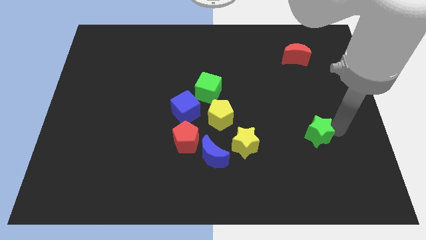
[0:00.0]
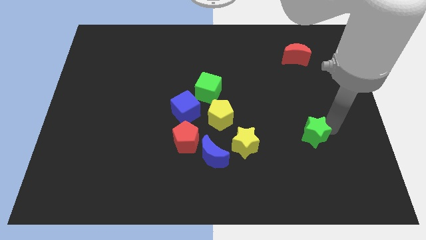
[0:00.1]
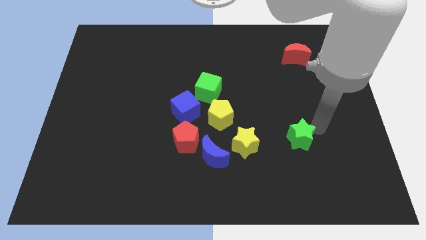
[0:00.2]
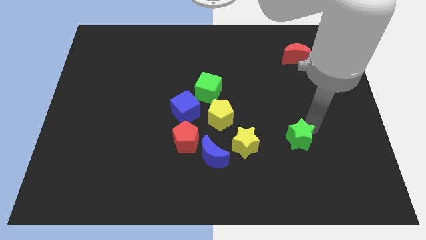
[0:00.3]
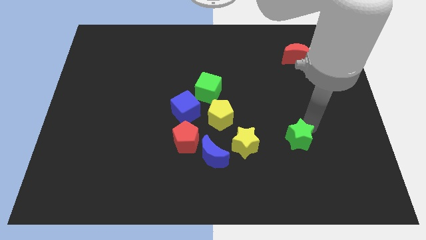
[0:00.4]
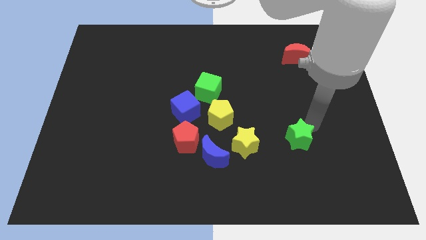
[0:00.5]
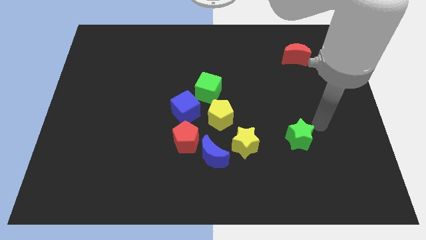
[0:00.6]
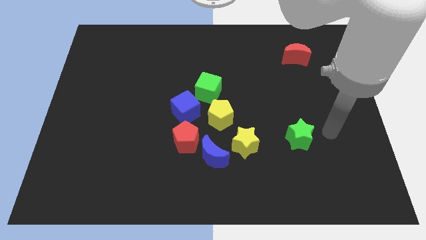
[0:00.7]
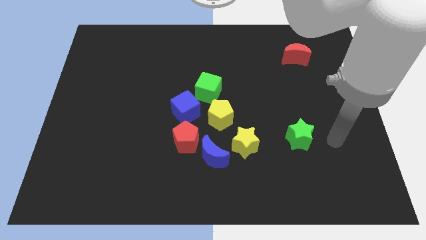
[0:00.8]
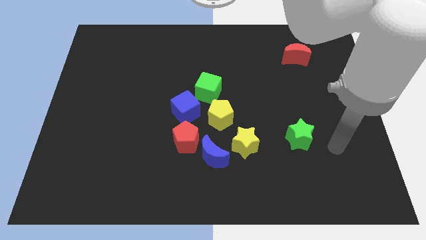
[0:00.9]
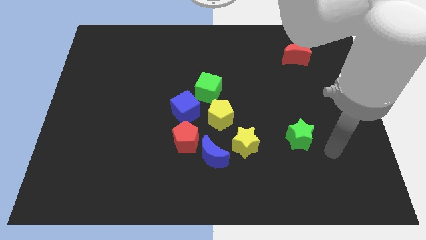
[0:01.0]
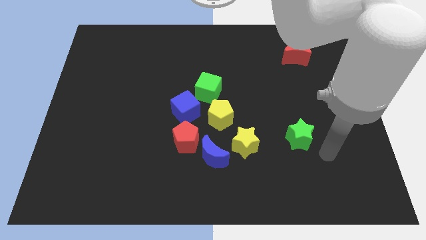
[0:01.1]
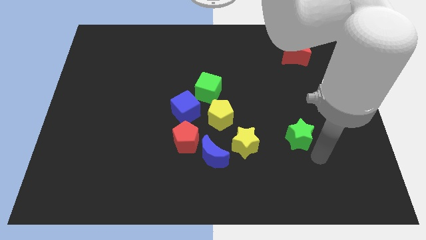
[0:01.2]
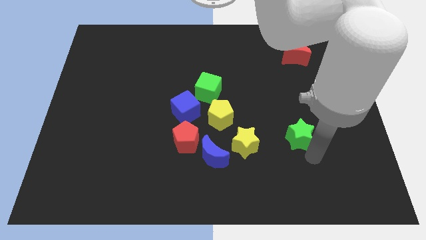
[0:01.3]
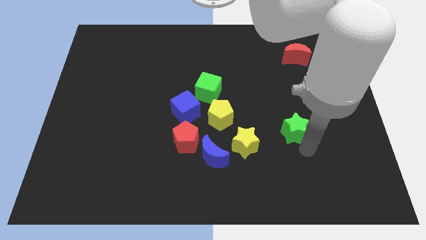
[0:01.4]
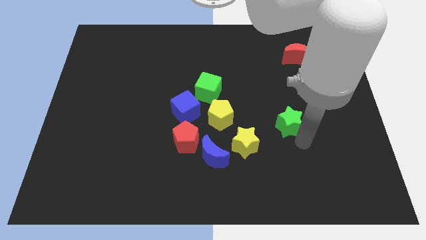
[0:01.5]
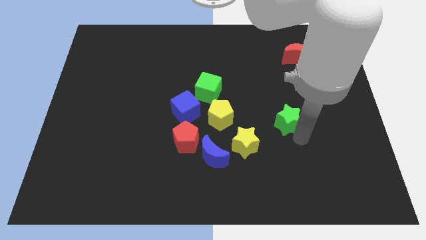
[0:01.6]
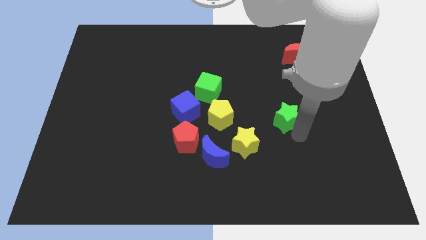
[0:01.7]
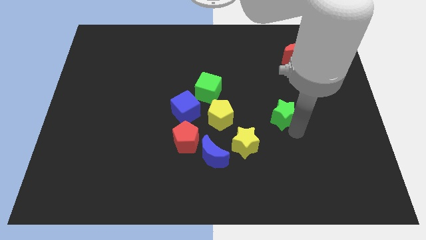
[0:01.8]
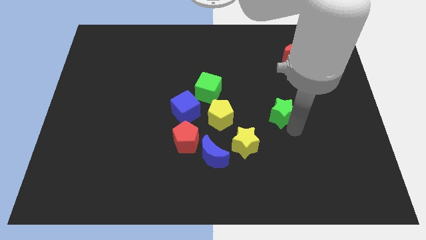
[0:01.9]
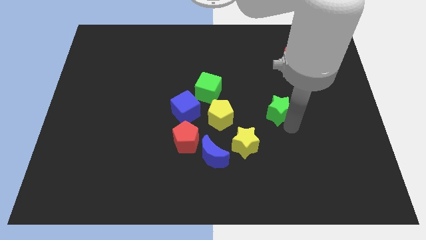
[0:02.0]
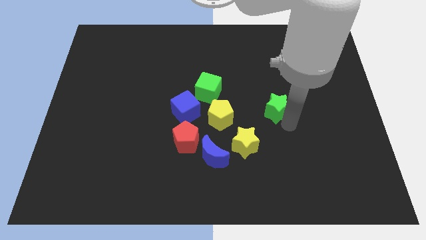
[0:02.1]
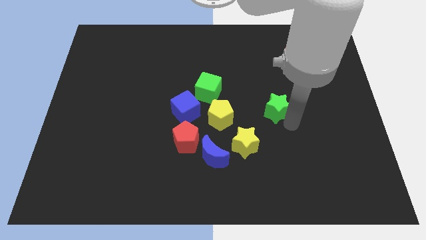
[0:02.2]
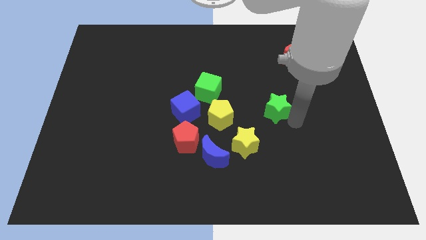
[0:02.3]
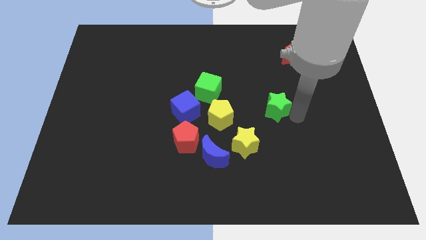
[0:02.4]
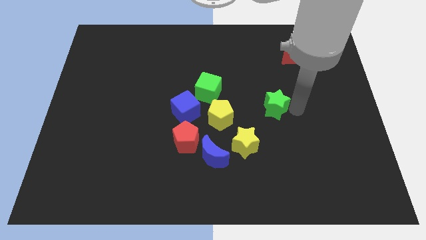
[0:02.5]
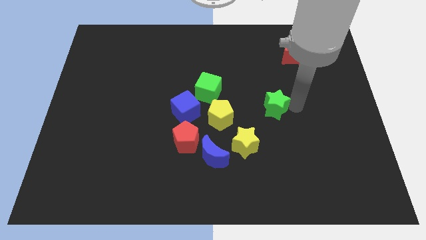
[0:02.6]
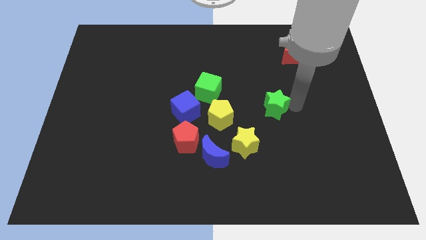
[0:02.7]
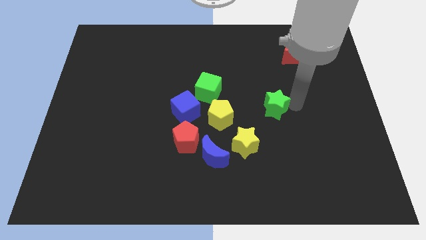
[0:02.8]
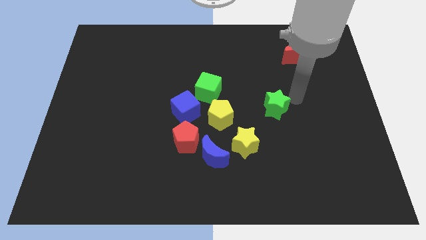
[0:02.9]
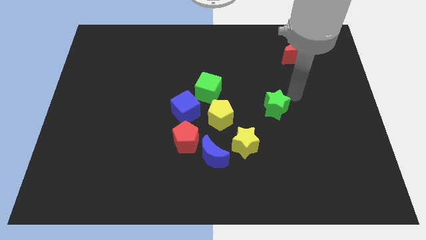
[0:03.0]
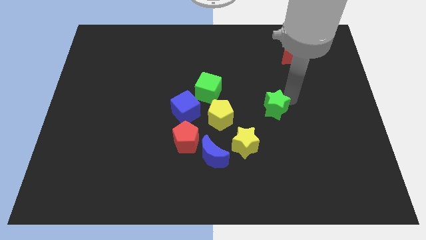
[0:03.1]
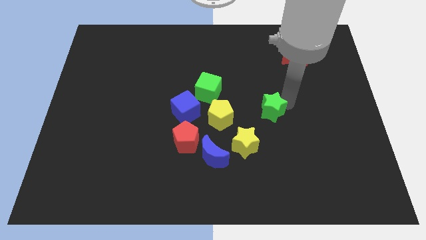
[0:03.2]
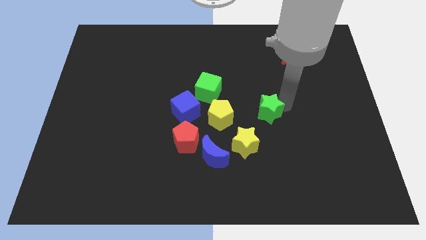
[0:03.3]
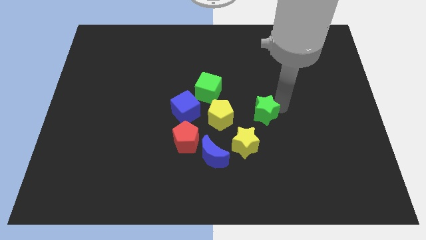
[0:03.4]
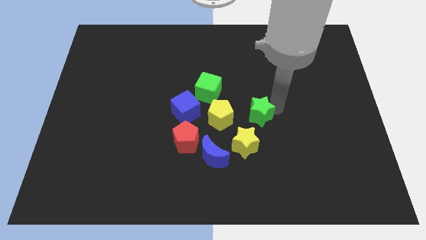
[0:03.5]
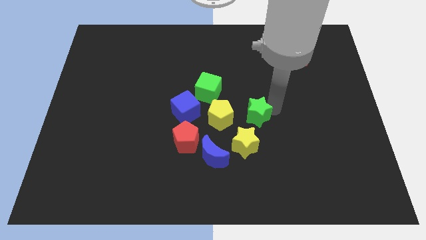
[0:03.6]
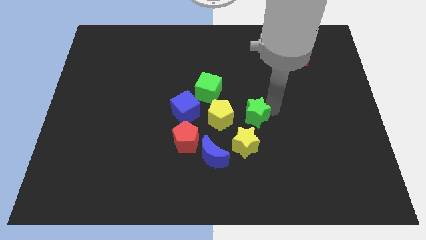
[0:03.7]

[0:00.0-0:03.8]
push the green star diagonally to the bottom left of the red moon

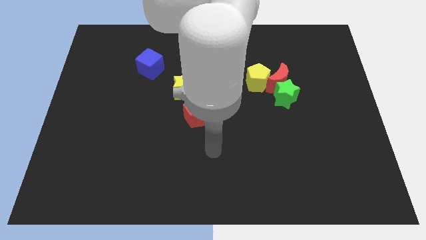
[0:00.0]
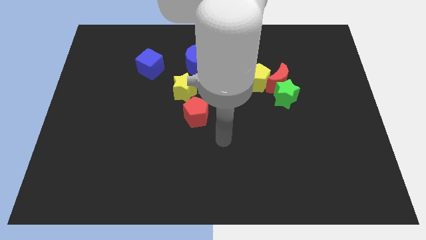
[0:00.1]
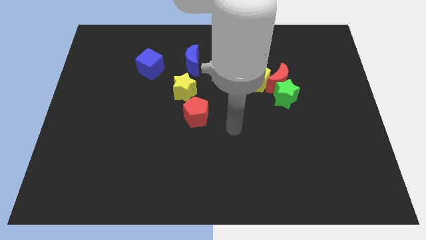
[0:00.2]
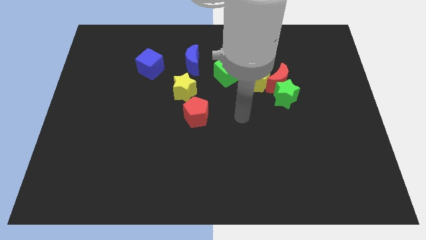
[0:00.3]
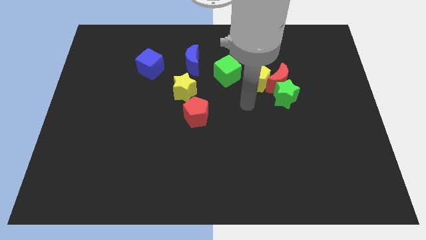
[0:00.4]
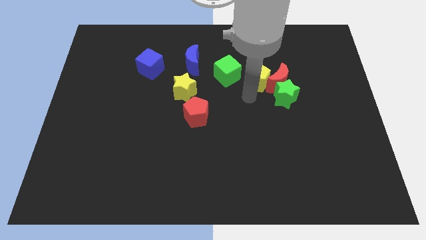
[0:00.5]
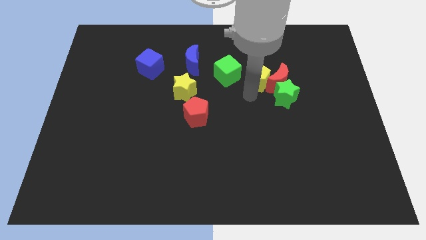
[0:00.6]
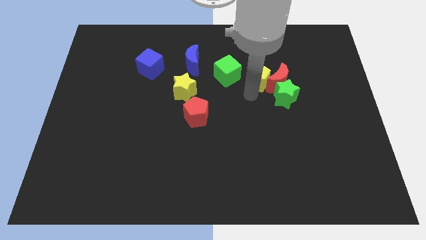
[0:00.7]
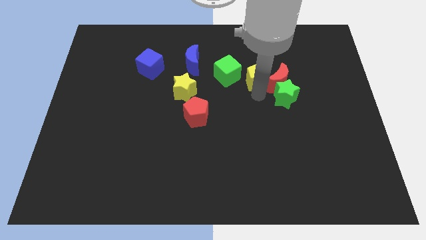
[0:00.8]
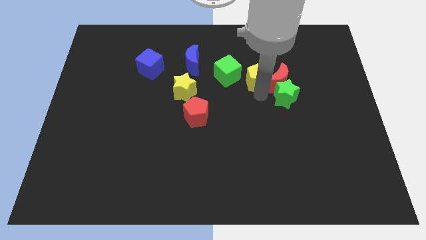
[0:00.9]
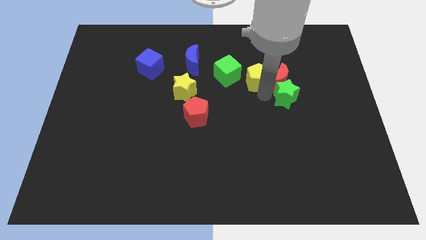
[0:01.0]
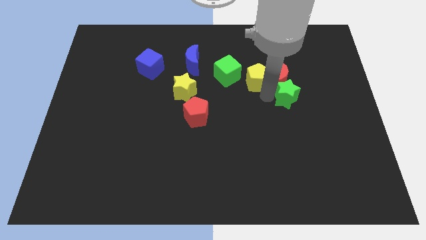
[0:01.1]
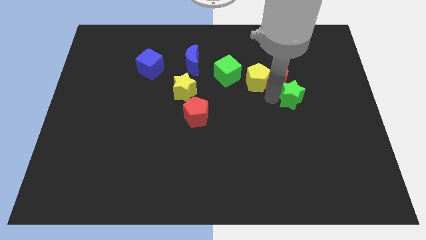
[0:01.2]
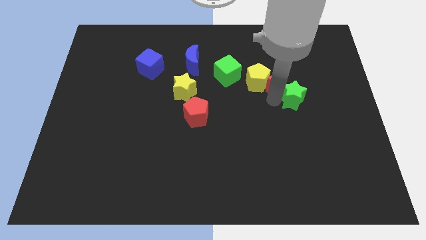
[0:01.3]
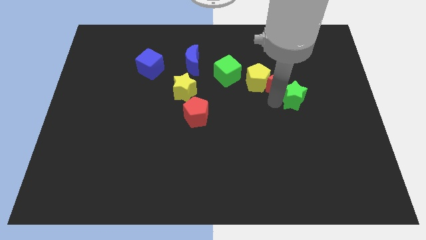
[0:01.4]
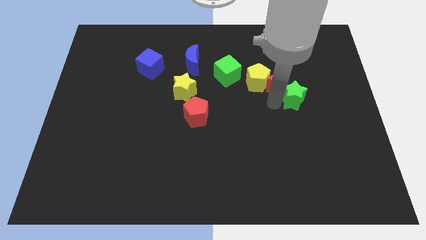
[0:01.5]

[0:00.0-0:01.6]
tap at the left side of the green star

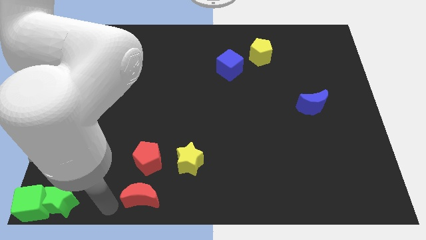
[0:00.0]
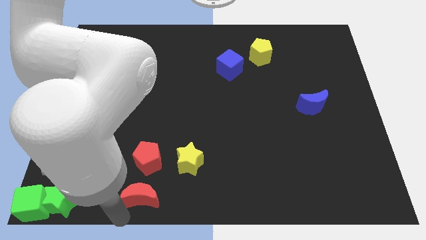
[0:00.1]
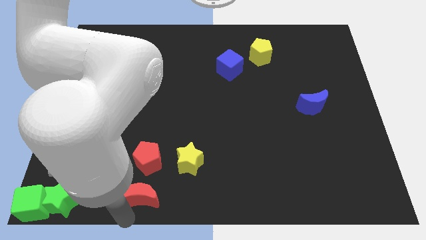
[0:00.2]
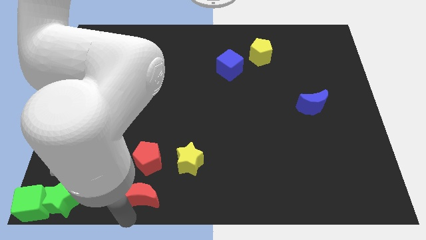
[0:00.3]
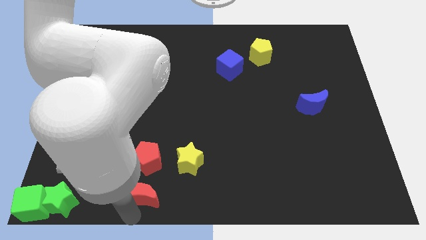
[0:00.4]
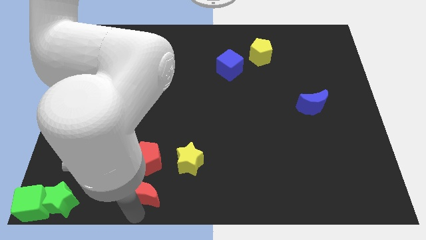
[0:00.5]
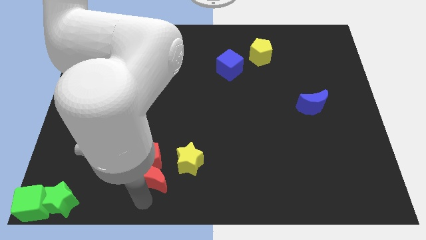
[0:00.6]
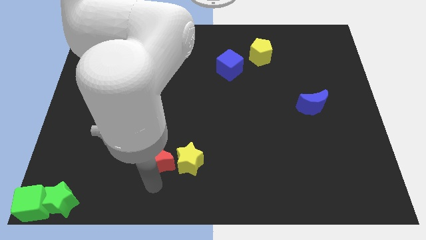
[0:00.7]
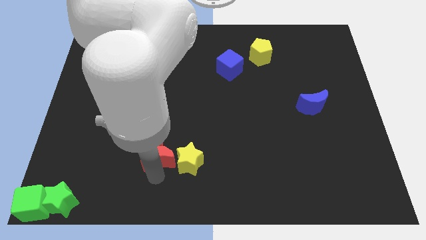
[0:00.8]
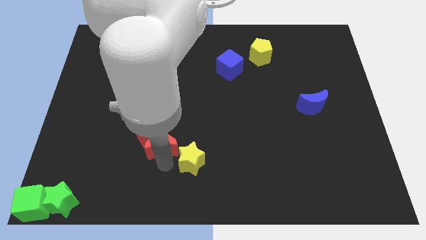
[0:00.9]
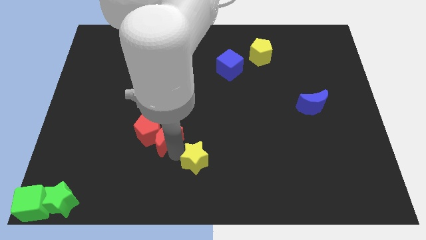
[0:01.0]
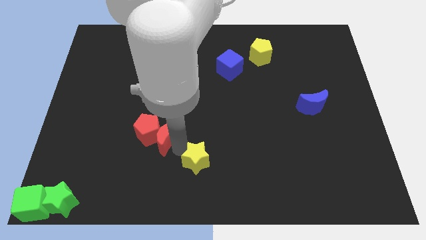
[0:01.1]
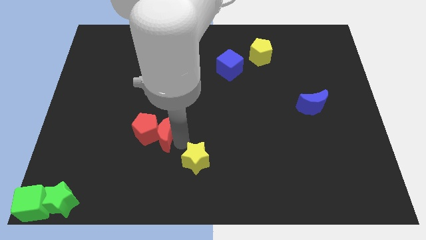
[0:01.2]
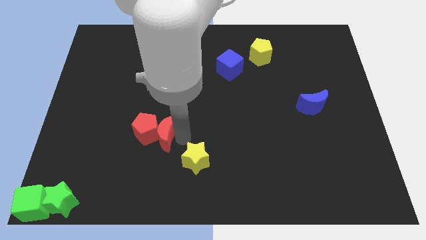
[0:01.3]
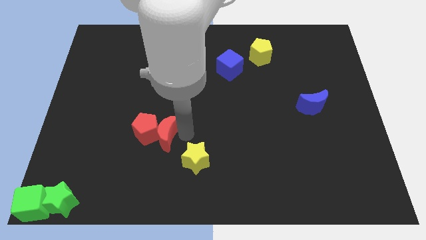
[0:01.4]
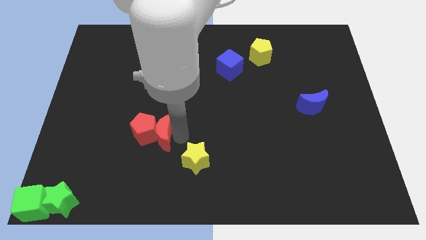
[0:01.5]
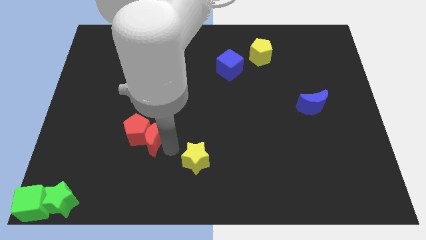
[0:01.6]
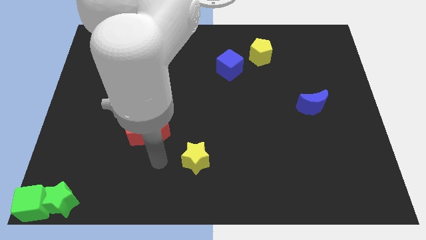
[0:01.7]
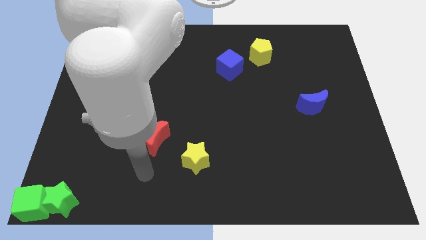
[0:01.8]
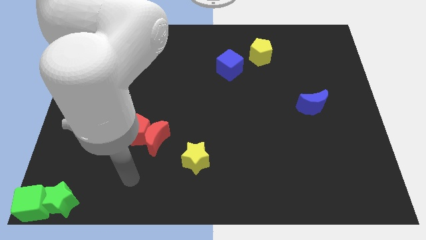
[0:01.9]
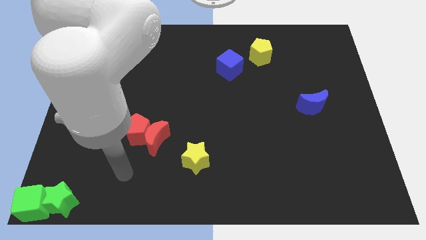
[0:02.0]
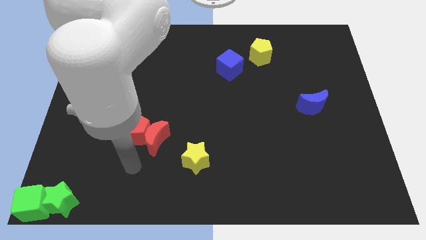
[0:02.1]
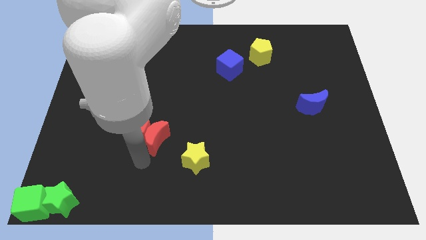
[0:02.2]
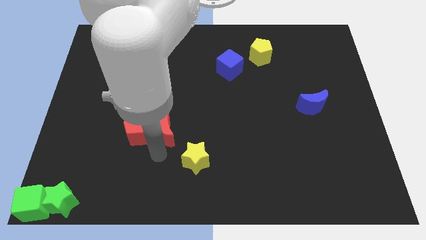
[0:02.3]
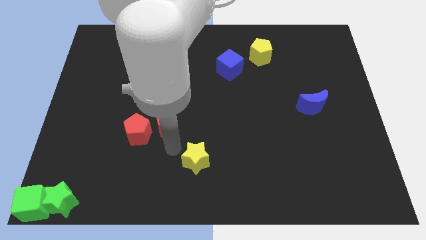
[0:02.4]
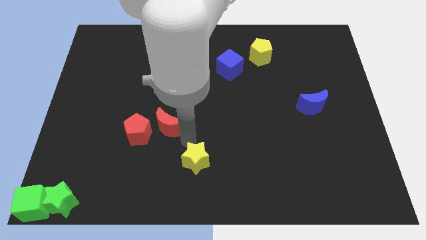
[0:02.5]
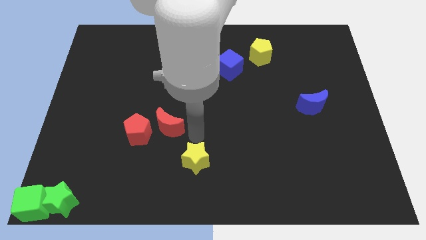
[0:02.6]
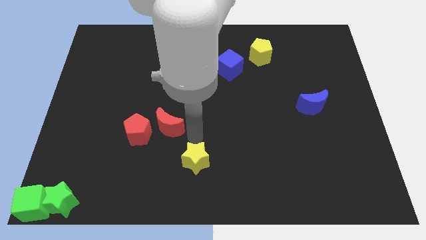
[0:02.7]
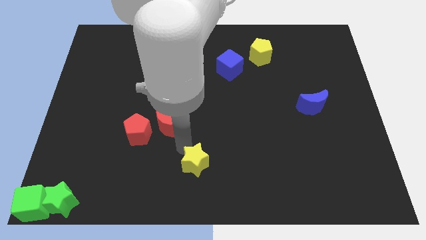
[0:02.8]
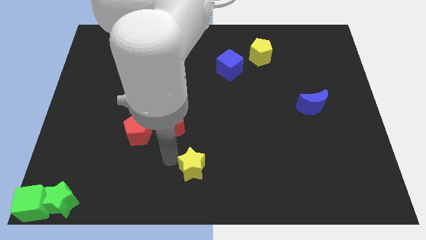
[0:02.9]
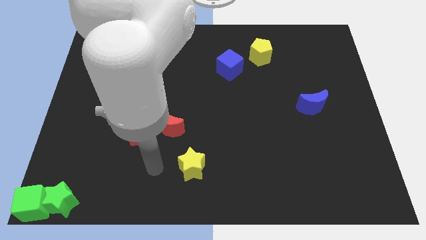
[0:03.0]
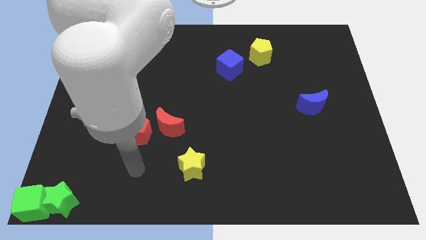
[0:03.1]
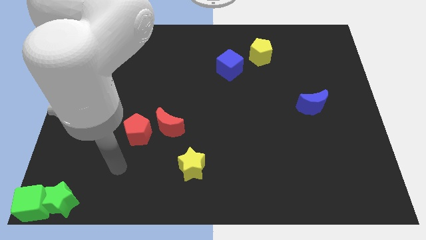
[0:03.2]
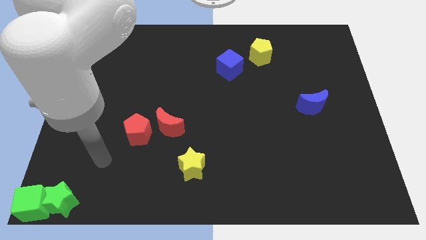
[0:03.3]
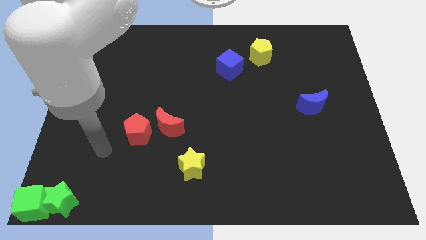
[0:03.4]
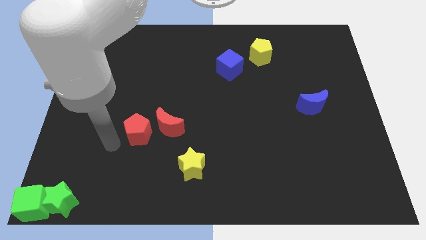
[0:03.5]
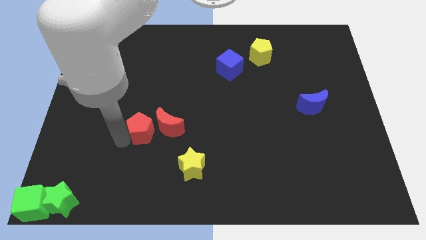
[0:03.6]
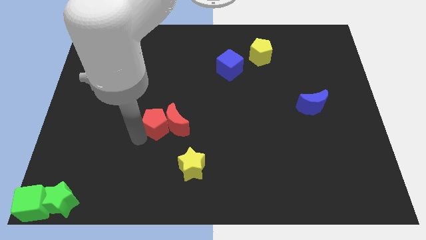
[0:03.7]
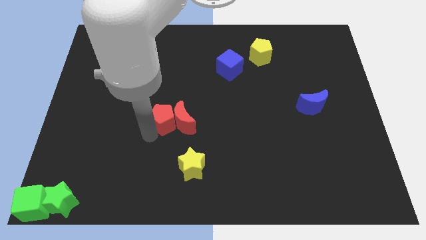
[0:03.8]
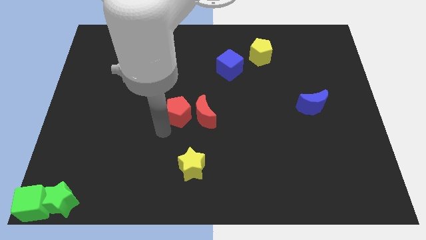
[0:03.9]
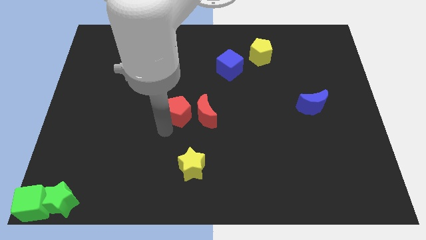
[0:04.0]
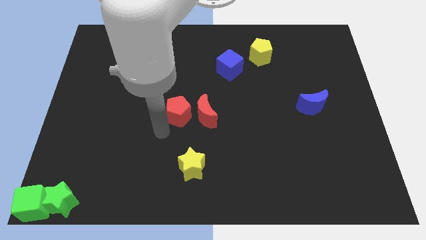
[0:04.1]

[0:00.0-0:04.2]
push the red pentagon along with red crescent towards the center of the board
